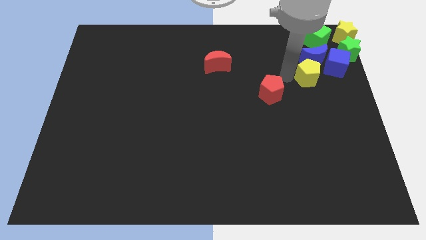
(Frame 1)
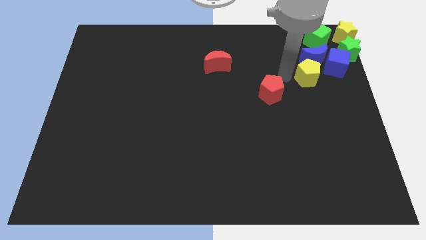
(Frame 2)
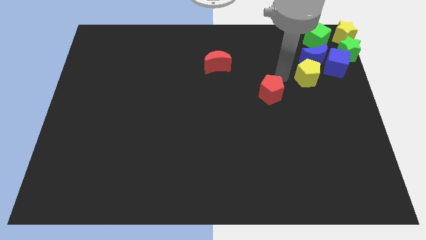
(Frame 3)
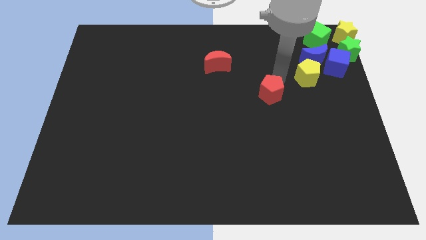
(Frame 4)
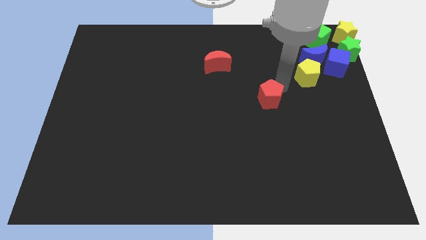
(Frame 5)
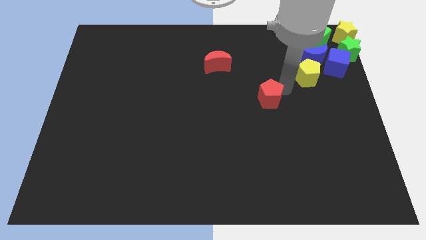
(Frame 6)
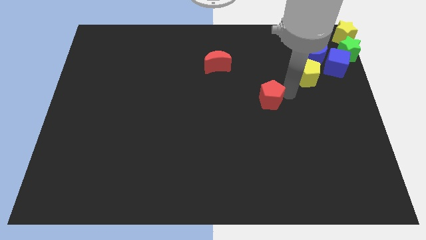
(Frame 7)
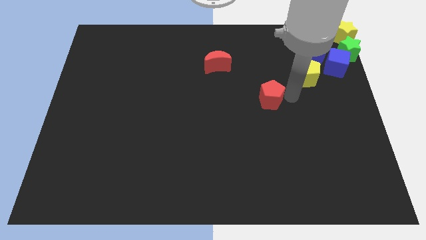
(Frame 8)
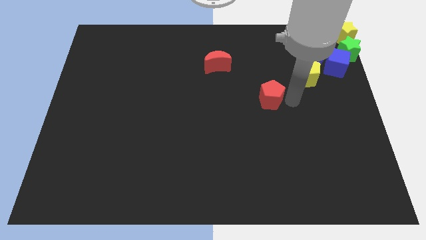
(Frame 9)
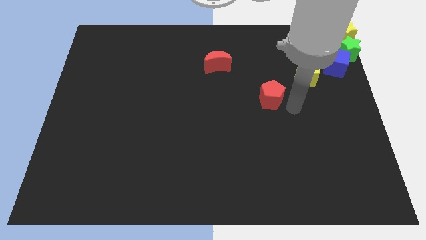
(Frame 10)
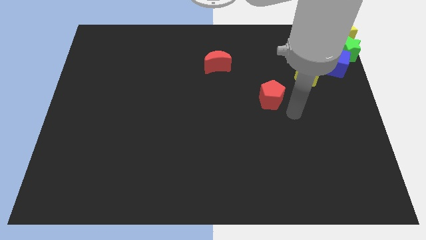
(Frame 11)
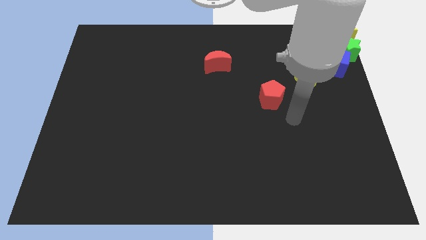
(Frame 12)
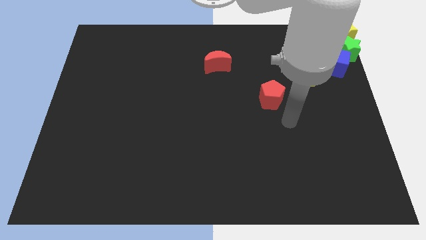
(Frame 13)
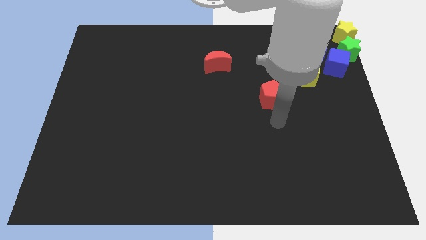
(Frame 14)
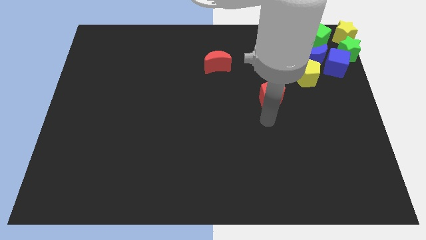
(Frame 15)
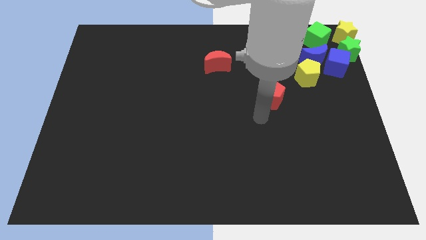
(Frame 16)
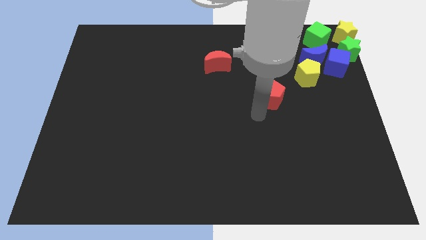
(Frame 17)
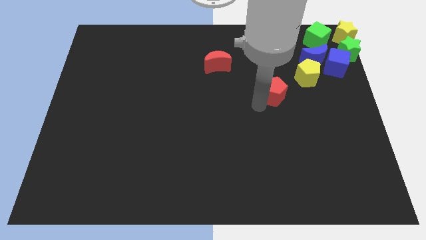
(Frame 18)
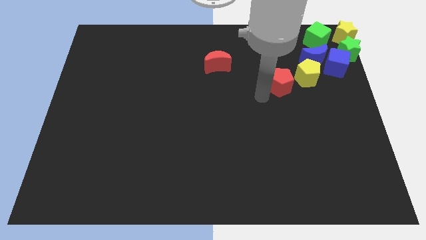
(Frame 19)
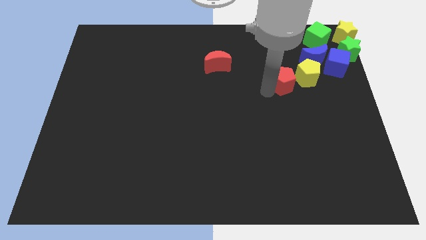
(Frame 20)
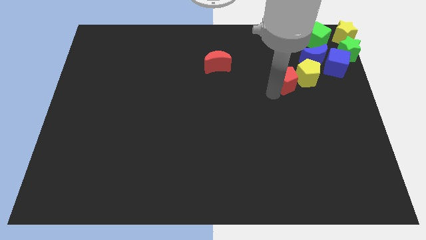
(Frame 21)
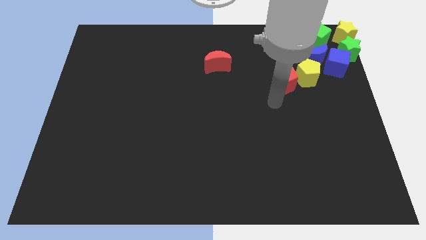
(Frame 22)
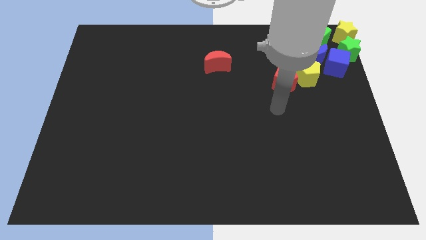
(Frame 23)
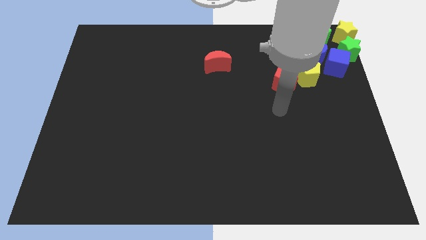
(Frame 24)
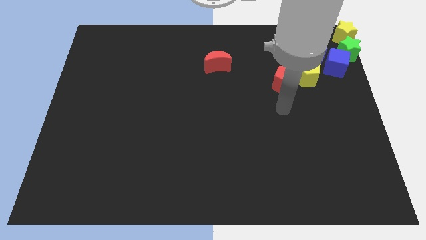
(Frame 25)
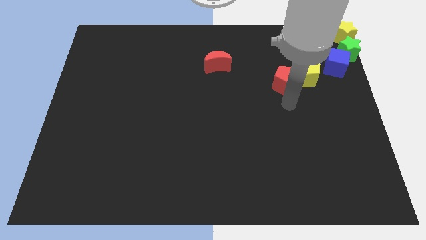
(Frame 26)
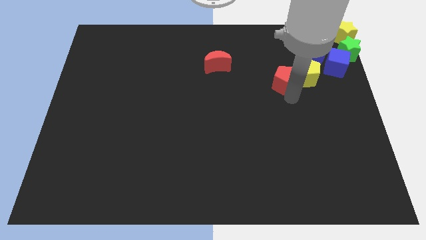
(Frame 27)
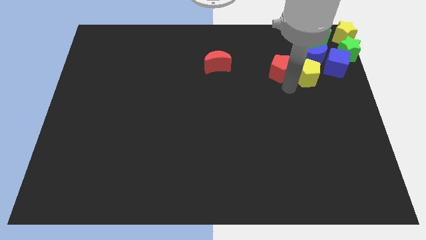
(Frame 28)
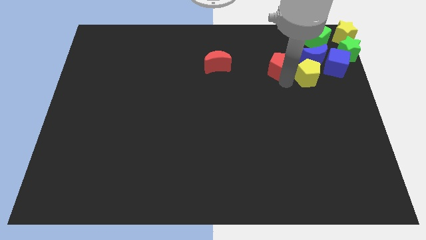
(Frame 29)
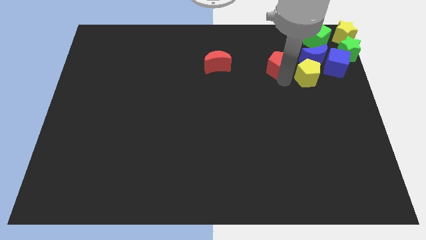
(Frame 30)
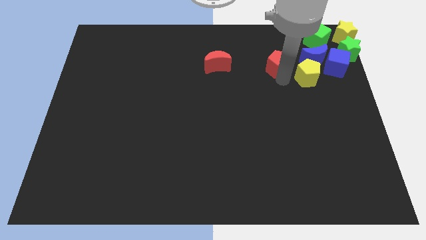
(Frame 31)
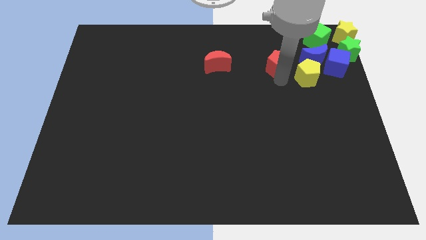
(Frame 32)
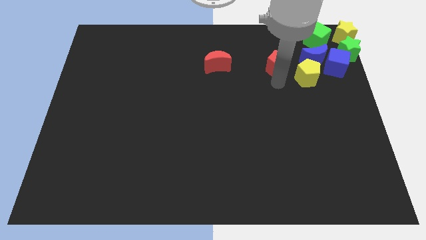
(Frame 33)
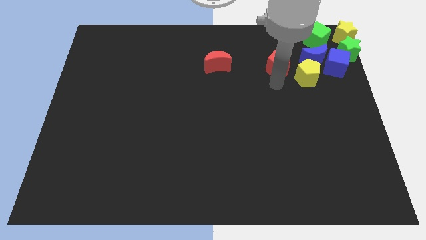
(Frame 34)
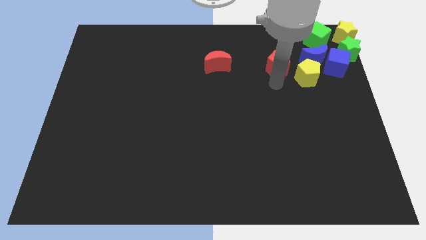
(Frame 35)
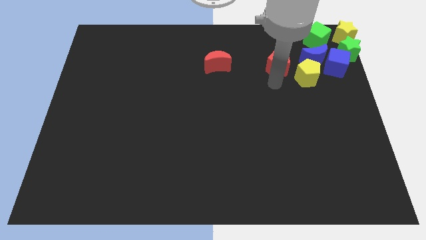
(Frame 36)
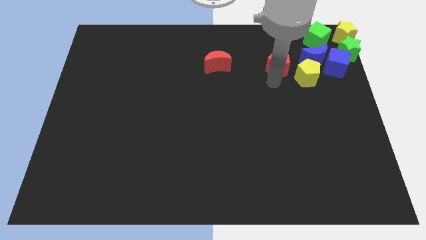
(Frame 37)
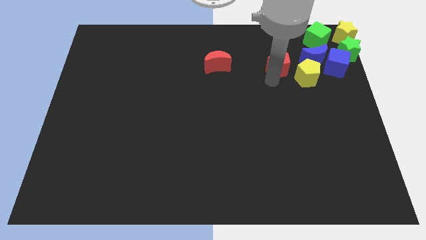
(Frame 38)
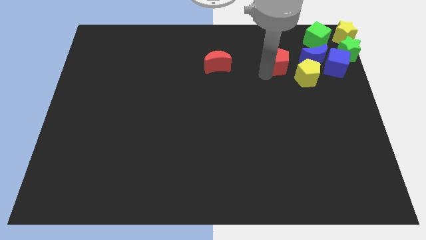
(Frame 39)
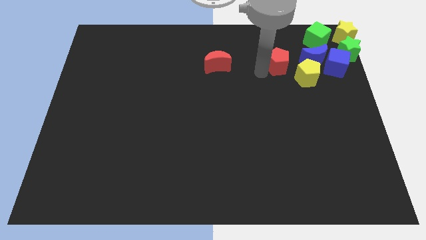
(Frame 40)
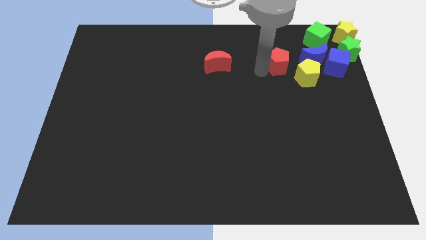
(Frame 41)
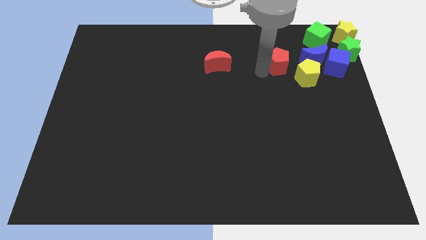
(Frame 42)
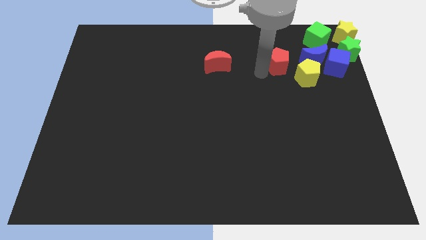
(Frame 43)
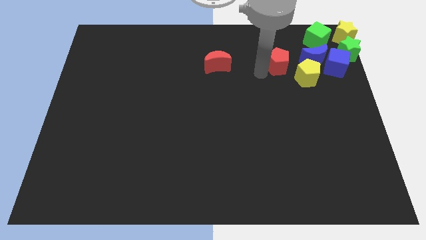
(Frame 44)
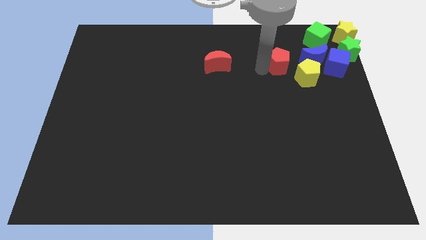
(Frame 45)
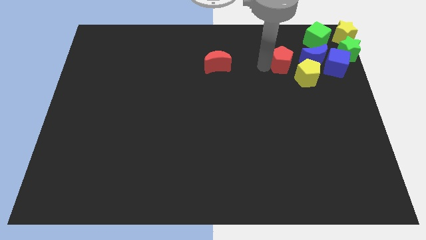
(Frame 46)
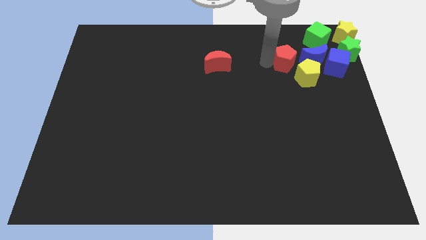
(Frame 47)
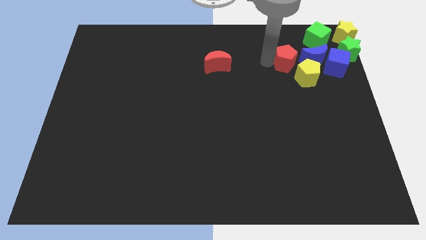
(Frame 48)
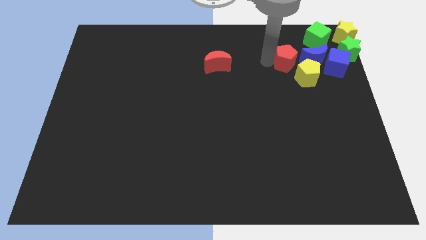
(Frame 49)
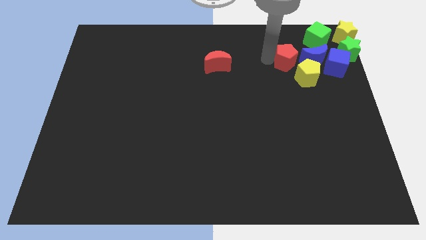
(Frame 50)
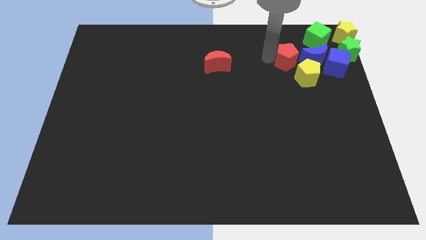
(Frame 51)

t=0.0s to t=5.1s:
move the red pentagon towards the left of the blue crescent

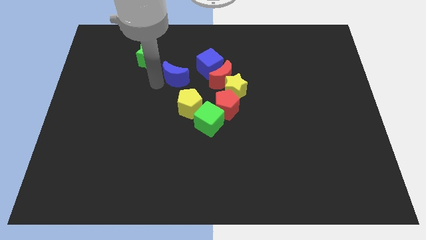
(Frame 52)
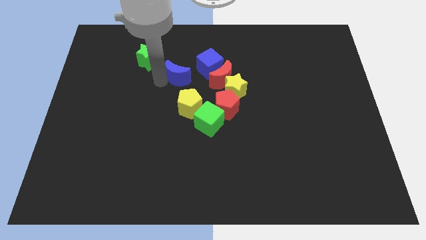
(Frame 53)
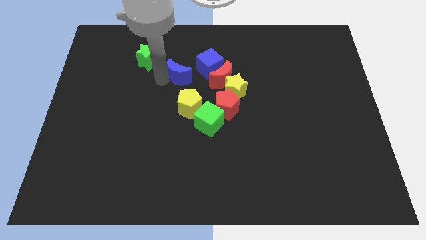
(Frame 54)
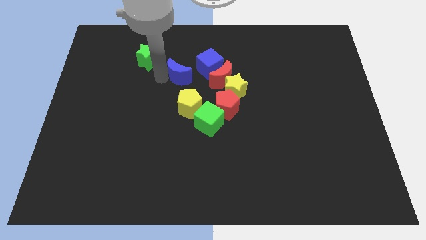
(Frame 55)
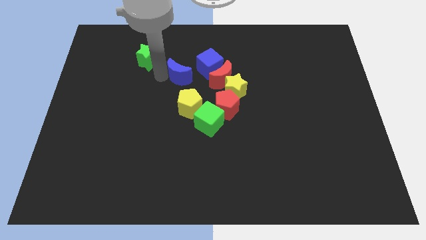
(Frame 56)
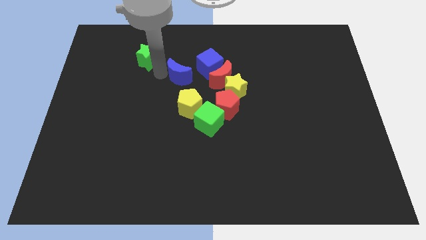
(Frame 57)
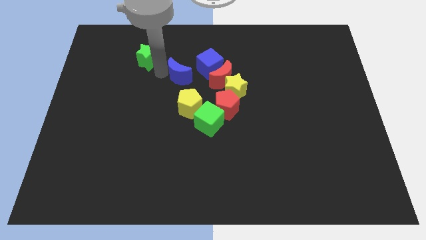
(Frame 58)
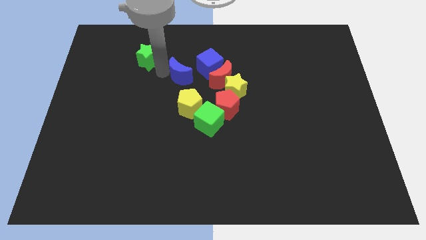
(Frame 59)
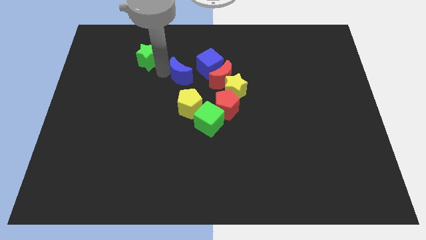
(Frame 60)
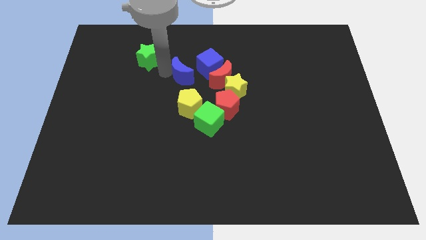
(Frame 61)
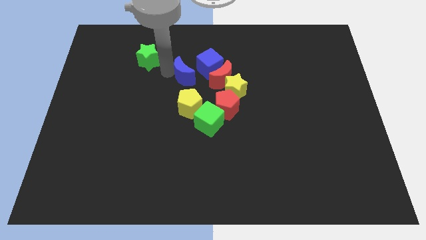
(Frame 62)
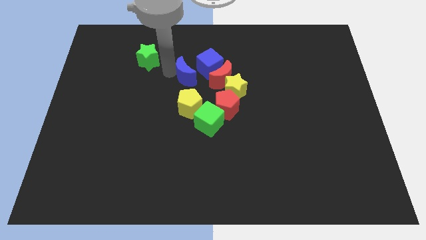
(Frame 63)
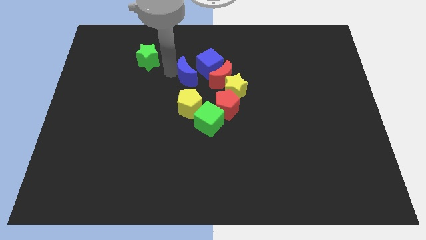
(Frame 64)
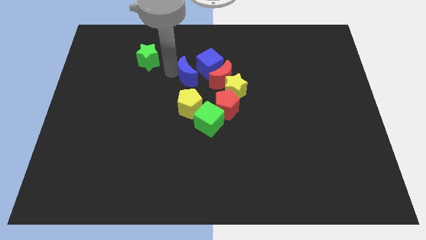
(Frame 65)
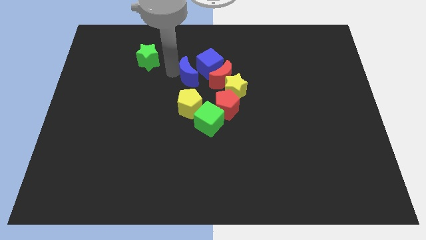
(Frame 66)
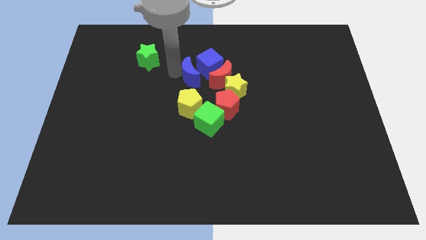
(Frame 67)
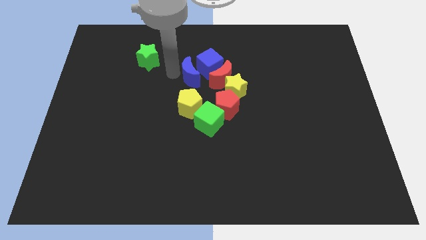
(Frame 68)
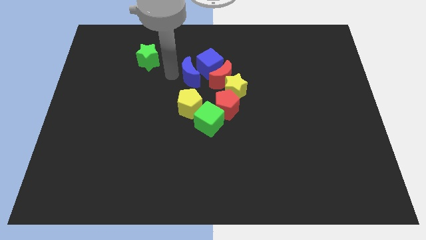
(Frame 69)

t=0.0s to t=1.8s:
move the blue crescent towards the left of the blue cube

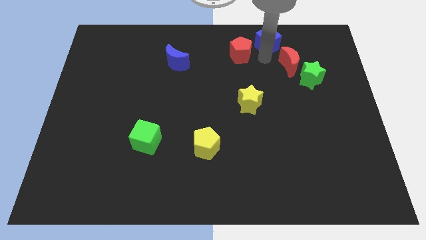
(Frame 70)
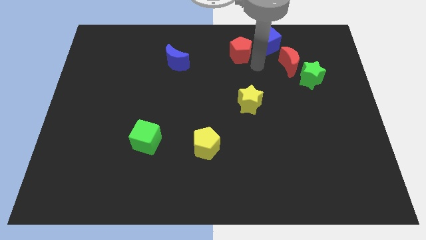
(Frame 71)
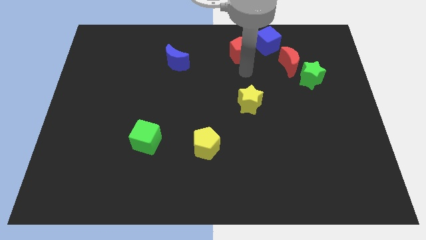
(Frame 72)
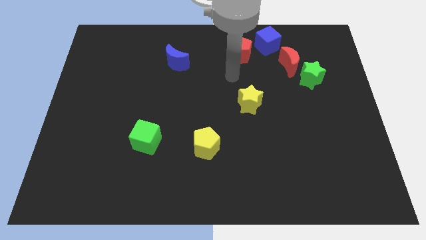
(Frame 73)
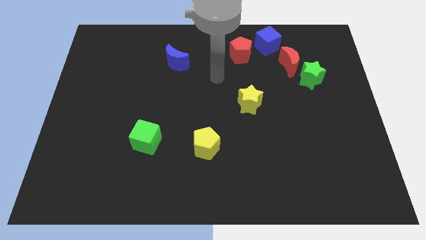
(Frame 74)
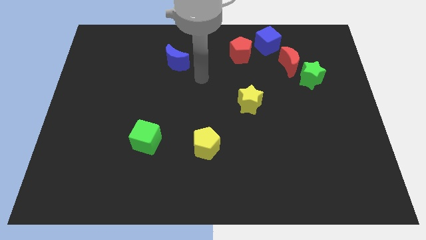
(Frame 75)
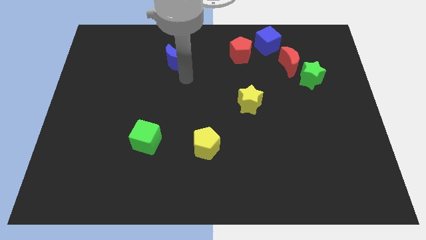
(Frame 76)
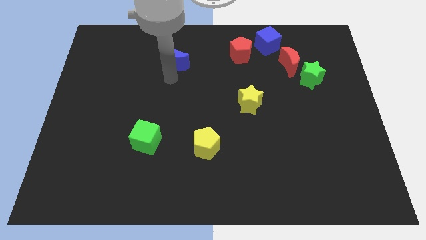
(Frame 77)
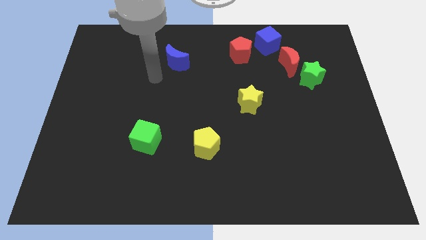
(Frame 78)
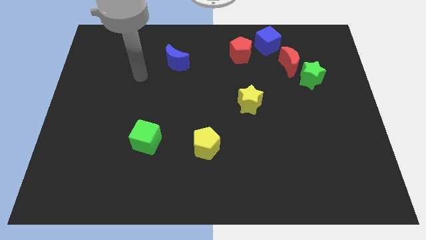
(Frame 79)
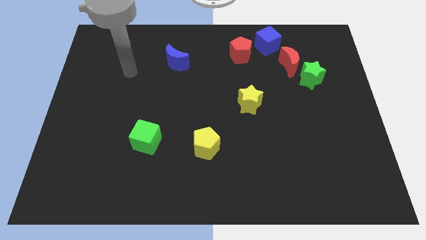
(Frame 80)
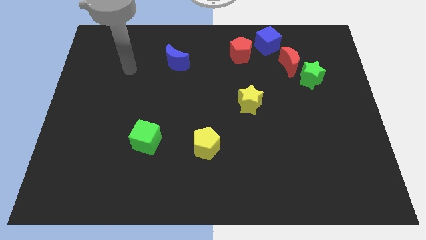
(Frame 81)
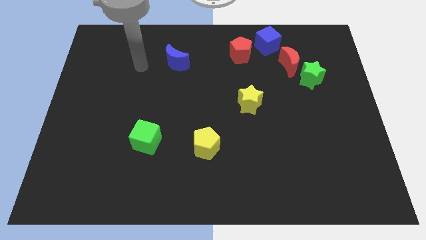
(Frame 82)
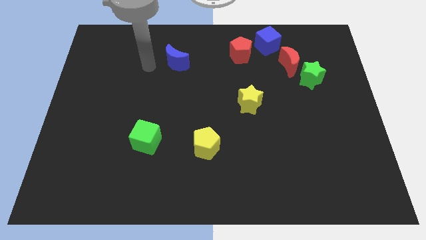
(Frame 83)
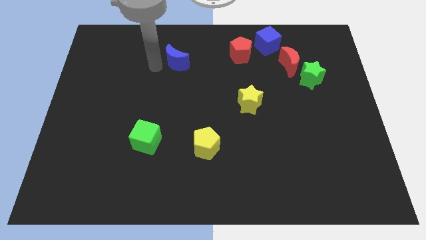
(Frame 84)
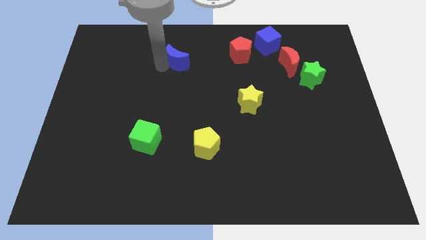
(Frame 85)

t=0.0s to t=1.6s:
point your arm at the left of the blue crescent

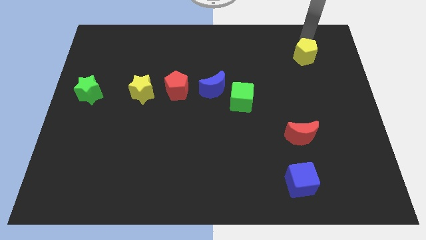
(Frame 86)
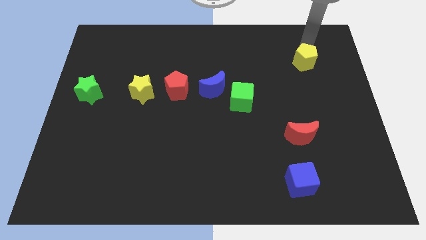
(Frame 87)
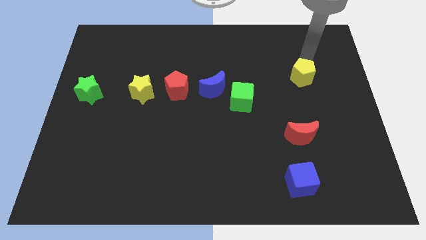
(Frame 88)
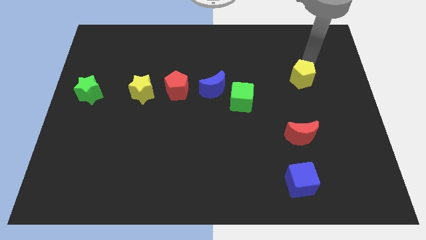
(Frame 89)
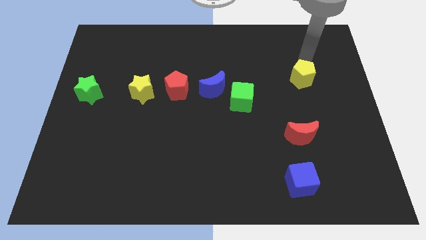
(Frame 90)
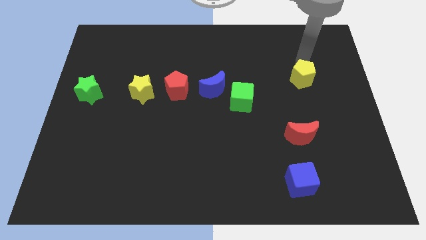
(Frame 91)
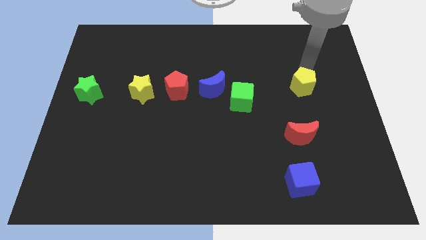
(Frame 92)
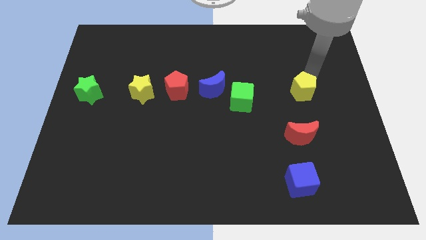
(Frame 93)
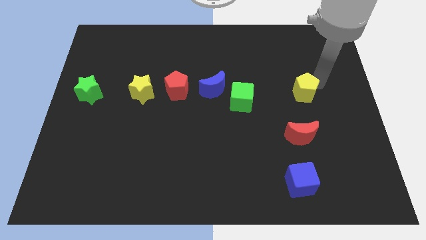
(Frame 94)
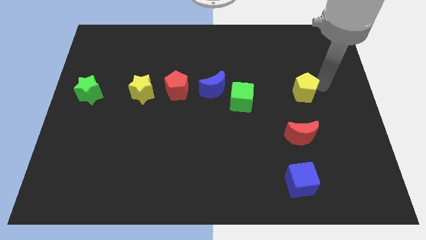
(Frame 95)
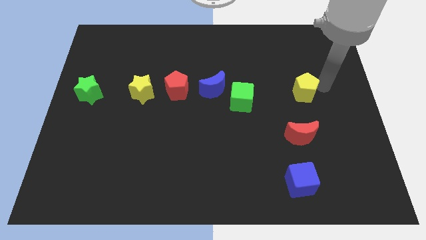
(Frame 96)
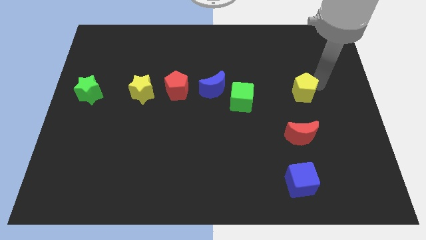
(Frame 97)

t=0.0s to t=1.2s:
push the yellow pentagon downwards
